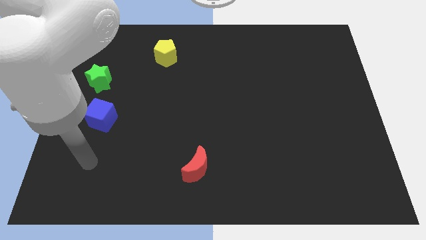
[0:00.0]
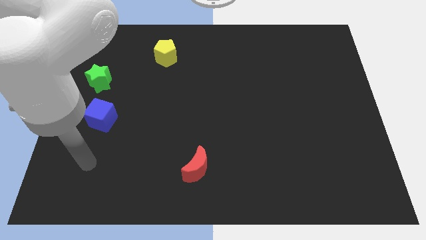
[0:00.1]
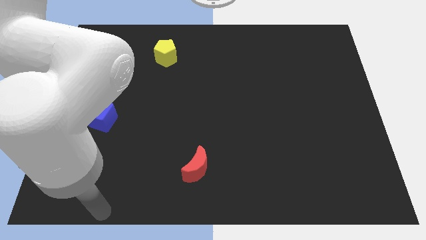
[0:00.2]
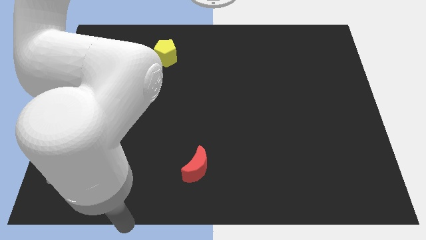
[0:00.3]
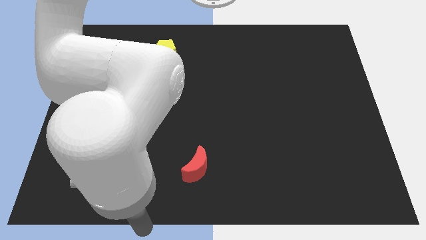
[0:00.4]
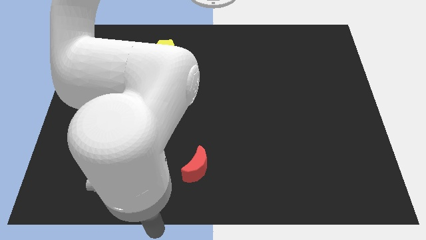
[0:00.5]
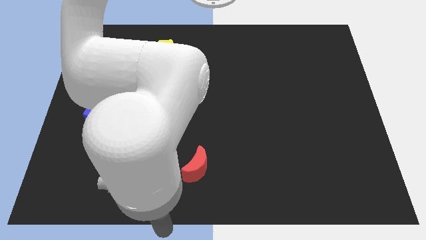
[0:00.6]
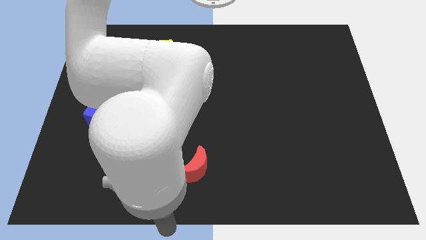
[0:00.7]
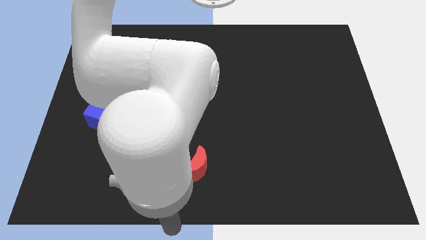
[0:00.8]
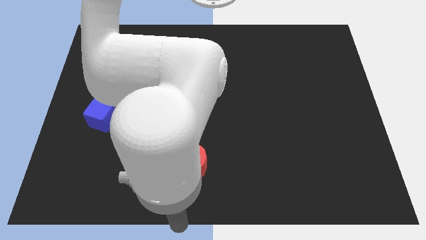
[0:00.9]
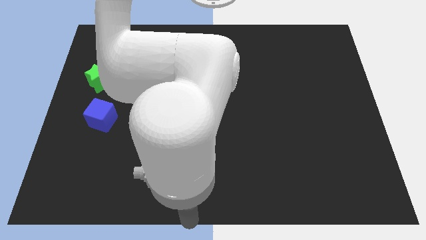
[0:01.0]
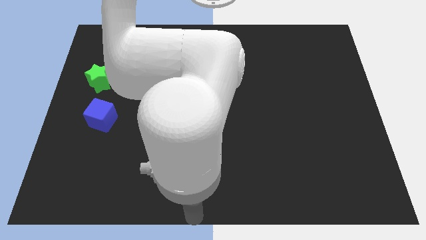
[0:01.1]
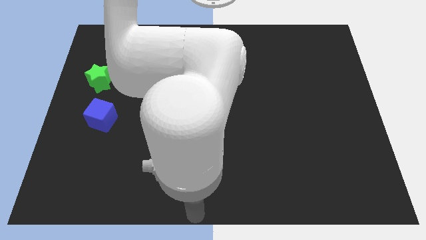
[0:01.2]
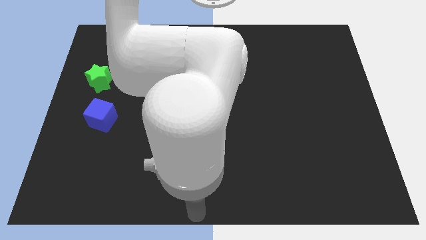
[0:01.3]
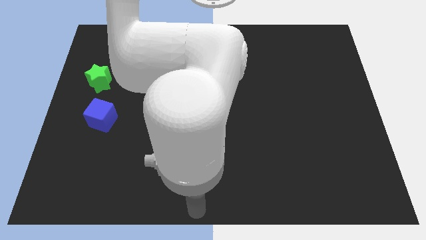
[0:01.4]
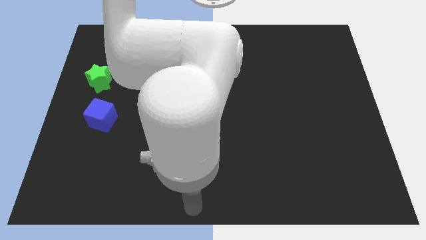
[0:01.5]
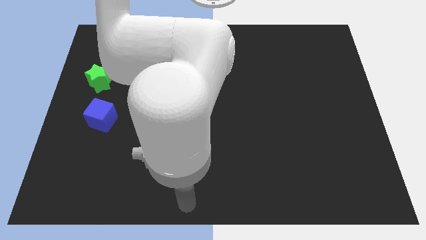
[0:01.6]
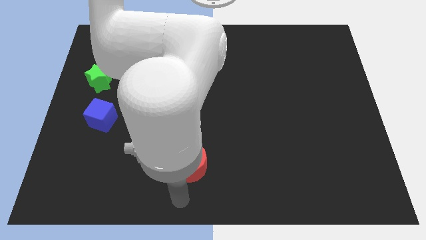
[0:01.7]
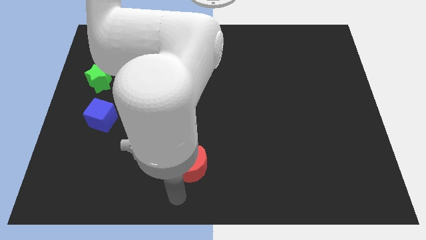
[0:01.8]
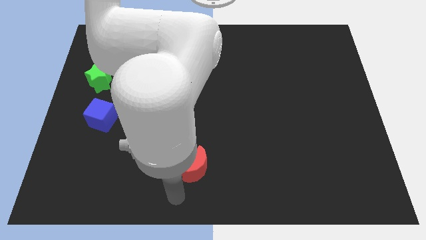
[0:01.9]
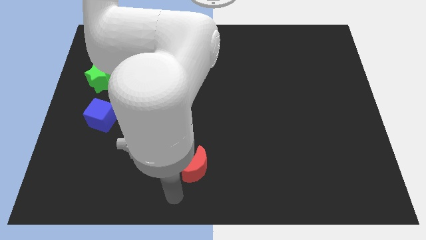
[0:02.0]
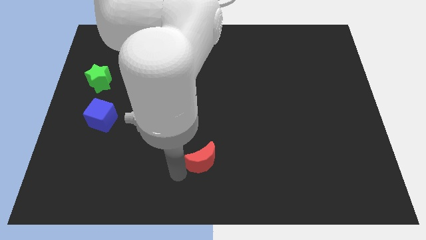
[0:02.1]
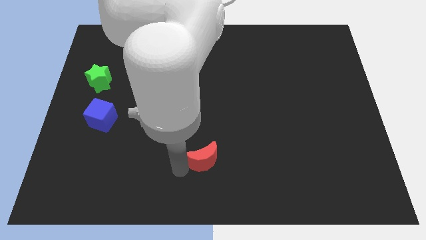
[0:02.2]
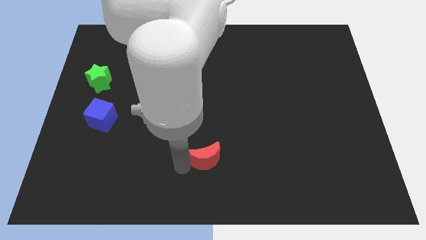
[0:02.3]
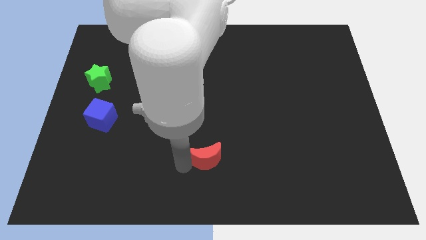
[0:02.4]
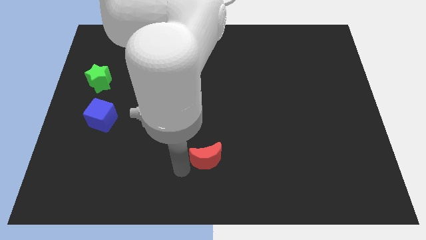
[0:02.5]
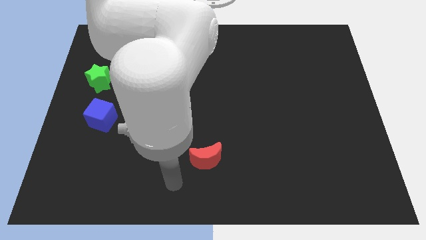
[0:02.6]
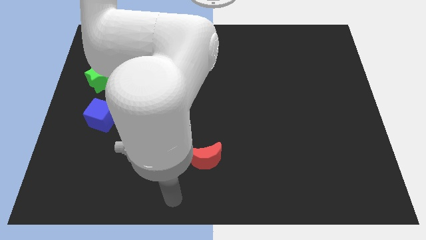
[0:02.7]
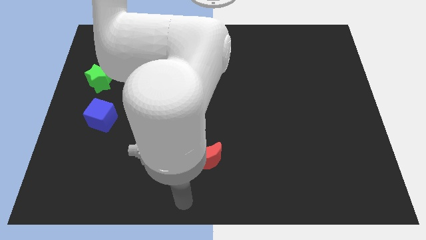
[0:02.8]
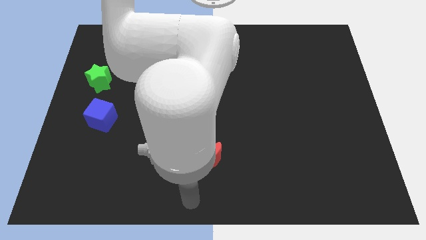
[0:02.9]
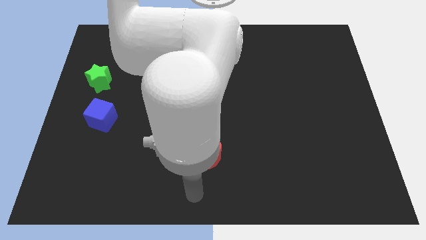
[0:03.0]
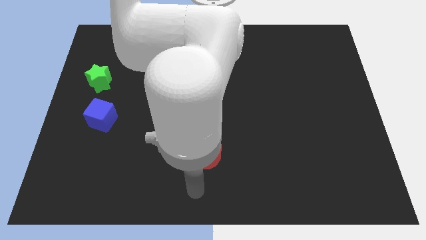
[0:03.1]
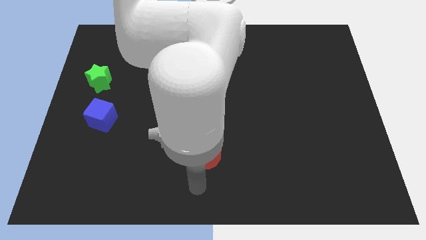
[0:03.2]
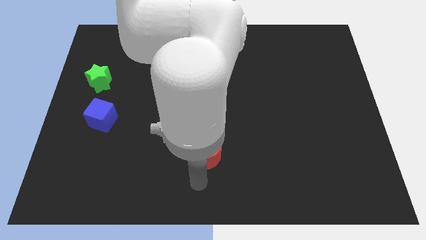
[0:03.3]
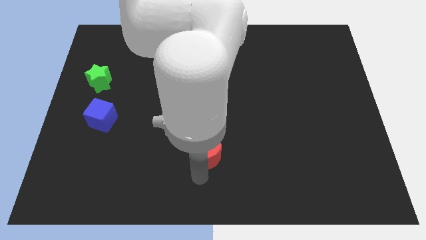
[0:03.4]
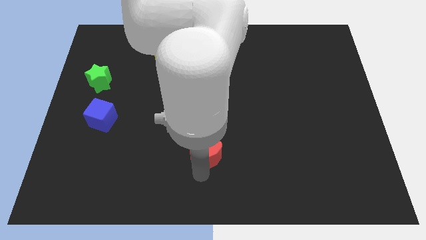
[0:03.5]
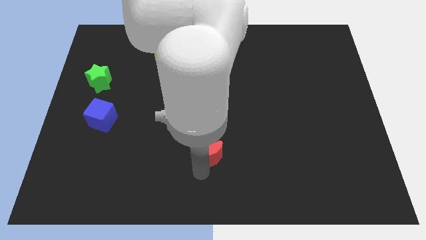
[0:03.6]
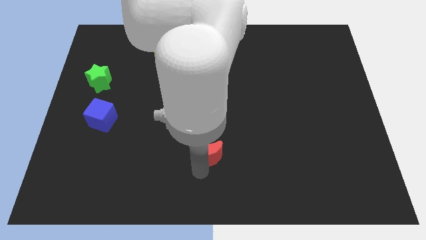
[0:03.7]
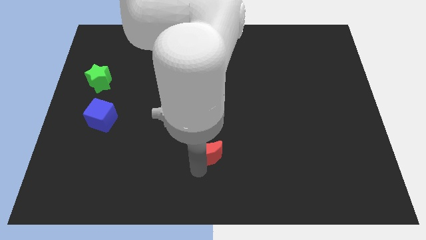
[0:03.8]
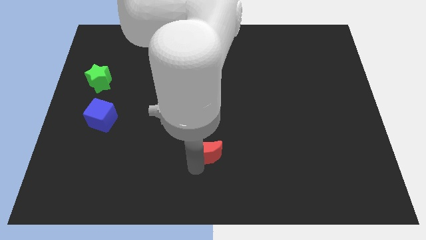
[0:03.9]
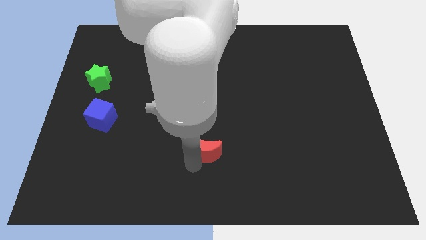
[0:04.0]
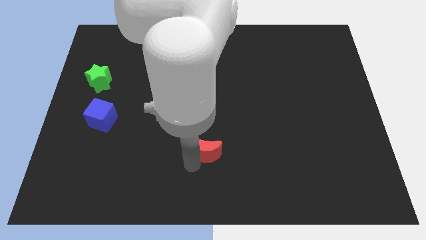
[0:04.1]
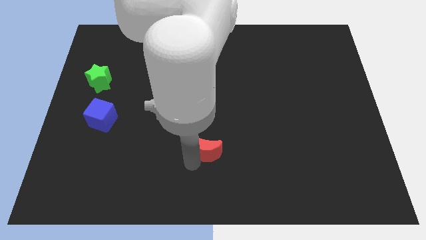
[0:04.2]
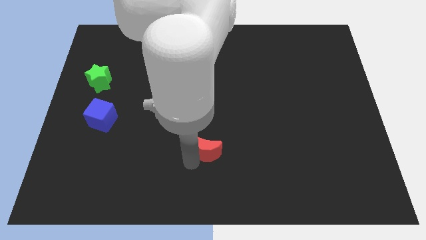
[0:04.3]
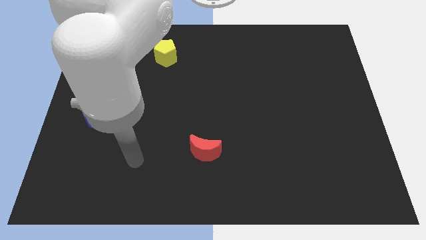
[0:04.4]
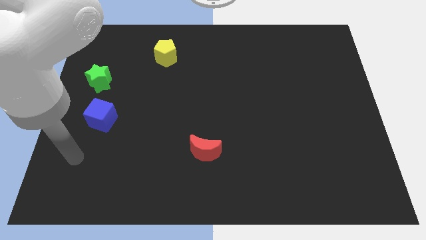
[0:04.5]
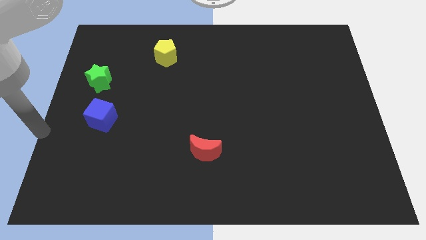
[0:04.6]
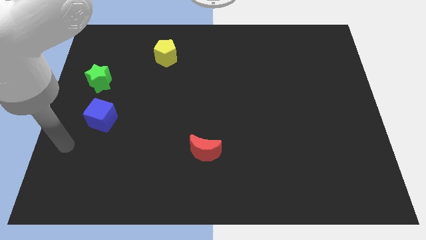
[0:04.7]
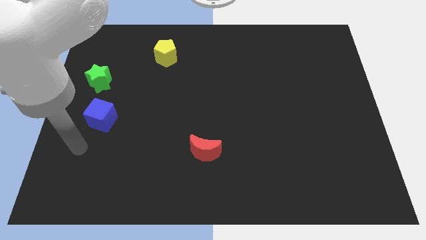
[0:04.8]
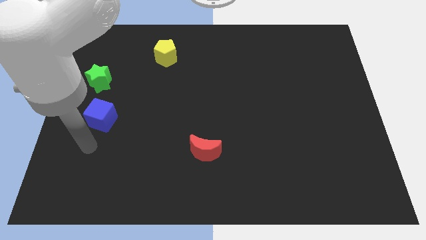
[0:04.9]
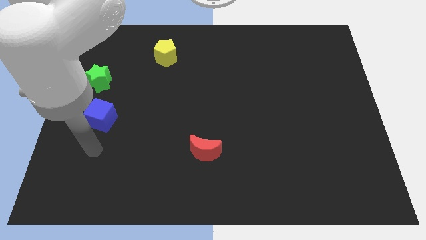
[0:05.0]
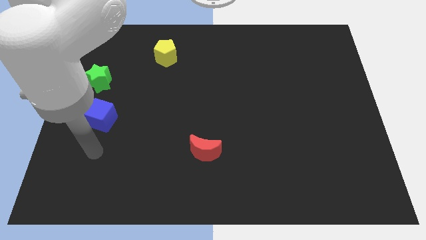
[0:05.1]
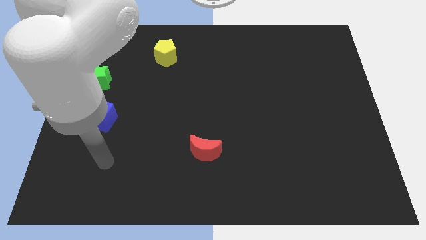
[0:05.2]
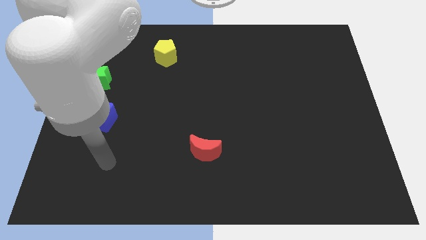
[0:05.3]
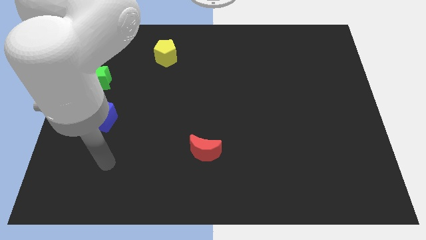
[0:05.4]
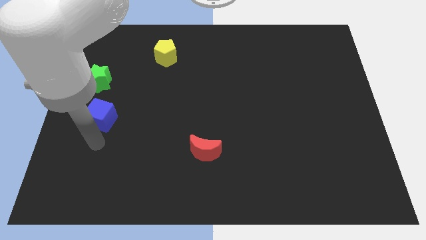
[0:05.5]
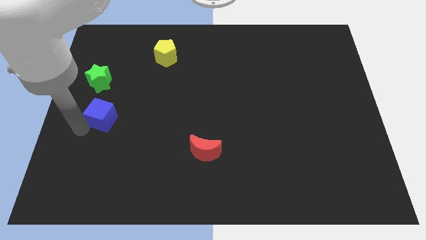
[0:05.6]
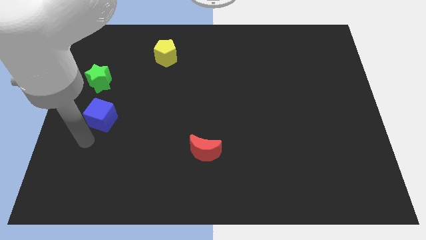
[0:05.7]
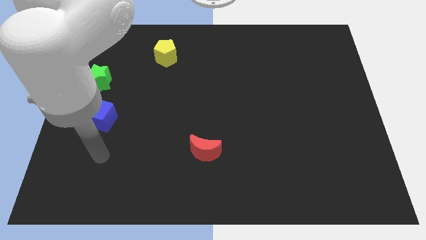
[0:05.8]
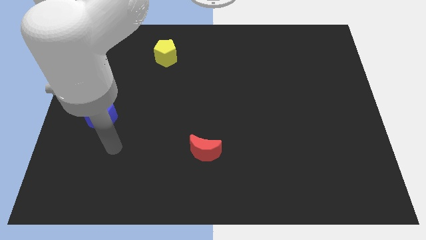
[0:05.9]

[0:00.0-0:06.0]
slide the red moon towards the yellow pentagon

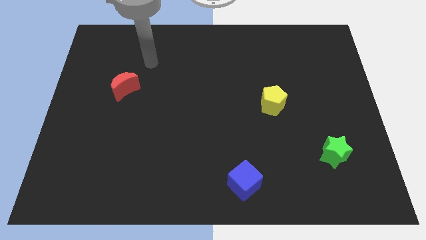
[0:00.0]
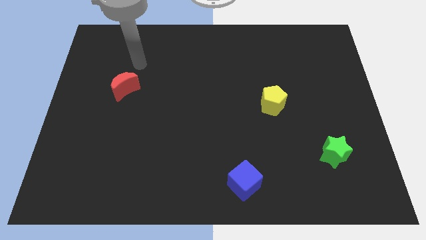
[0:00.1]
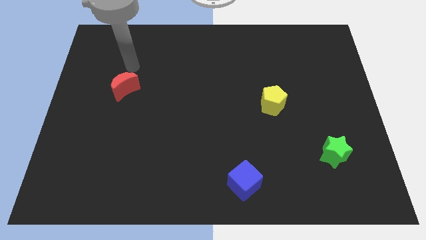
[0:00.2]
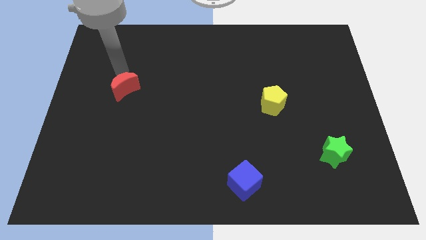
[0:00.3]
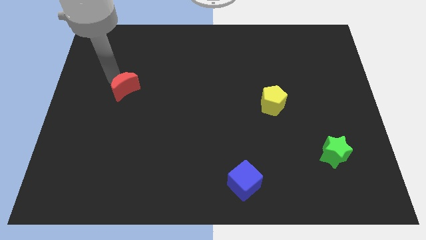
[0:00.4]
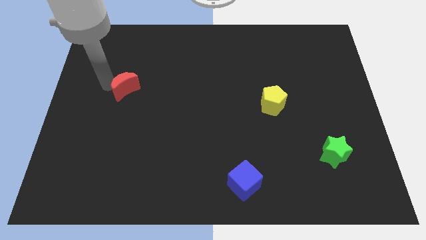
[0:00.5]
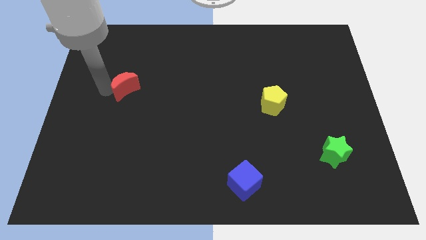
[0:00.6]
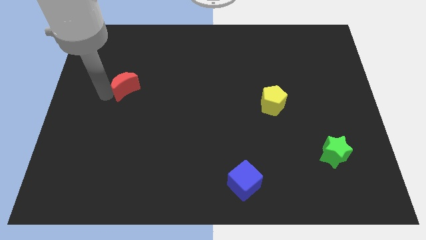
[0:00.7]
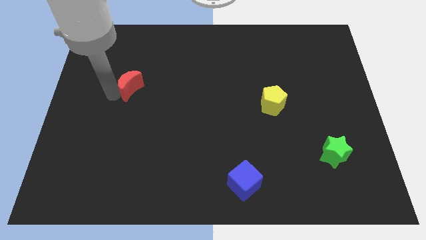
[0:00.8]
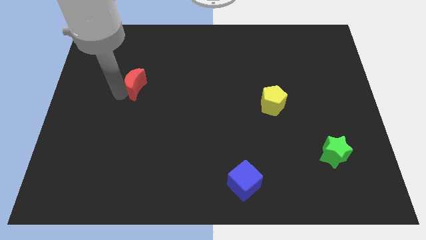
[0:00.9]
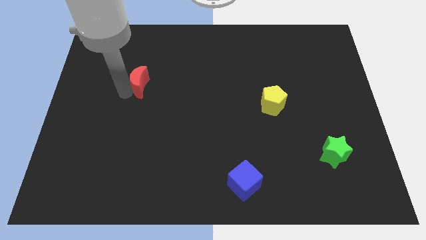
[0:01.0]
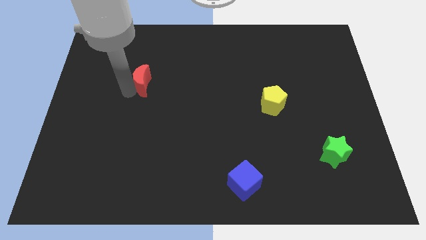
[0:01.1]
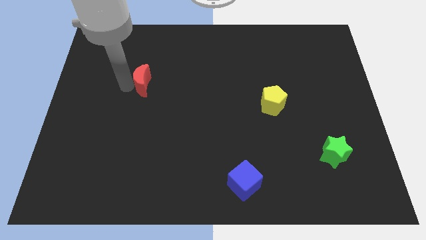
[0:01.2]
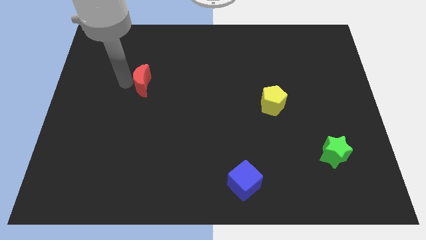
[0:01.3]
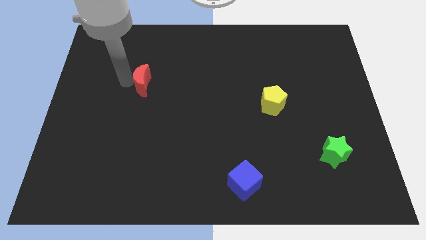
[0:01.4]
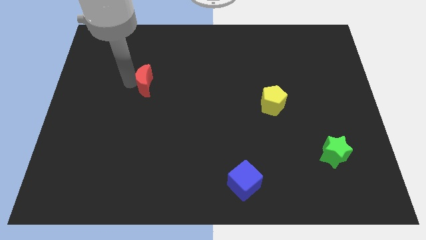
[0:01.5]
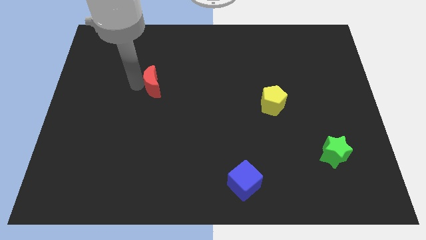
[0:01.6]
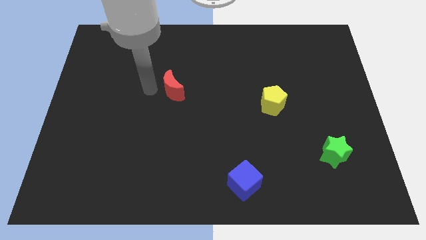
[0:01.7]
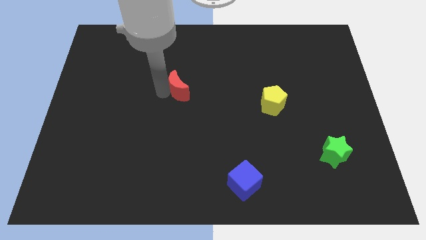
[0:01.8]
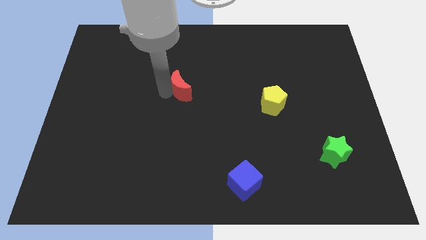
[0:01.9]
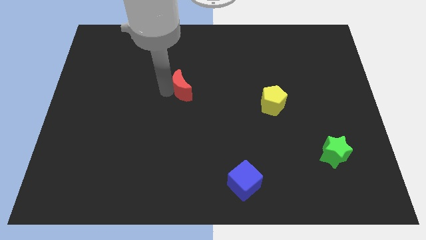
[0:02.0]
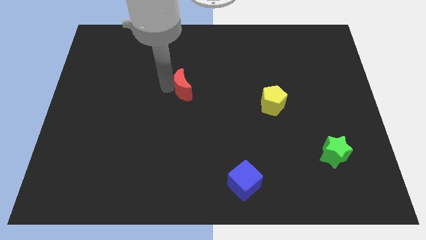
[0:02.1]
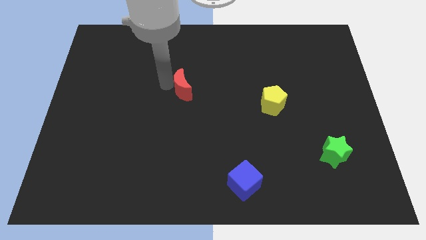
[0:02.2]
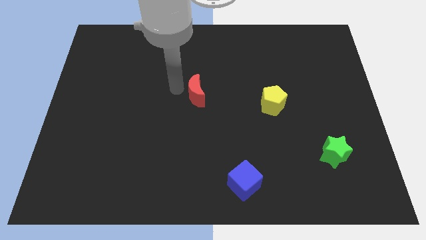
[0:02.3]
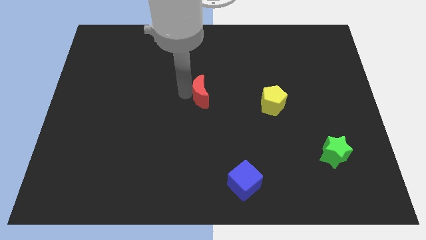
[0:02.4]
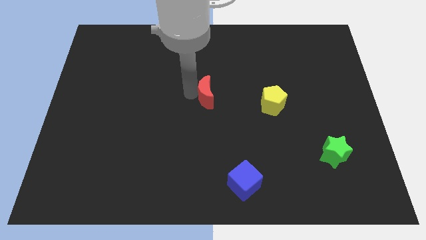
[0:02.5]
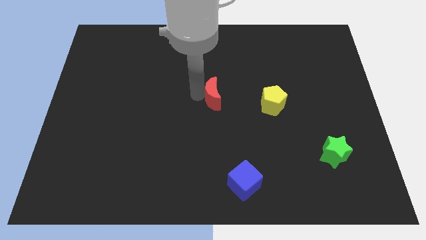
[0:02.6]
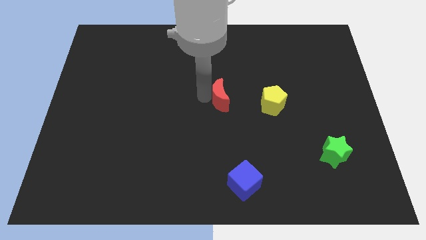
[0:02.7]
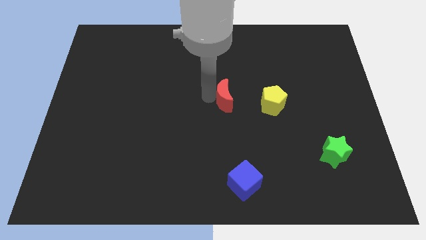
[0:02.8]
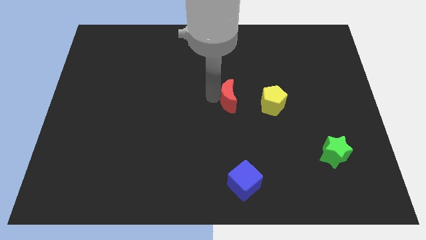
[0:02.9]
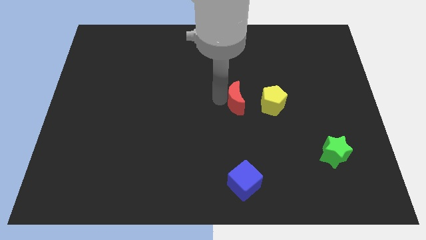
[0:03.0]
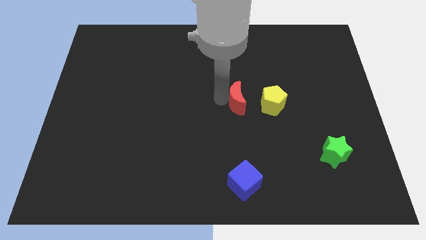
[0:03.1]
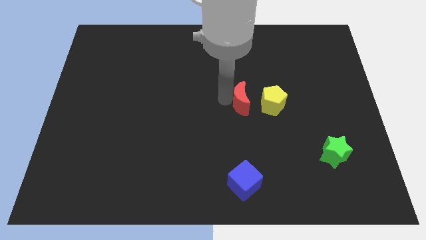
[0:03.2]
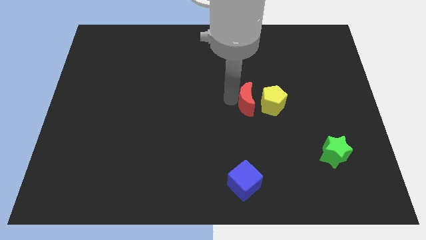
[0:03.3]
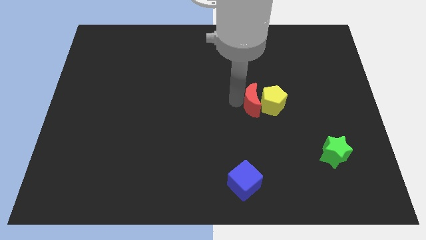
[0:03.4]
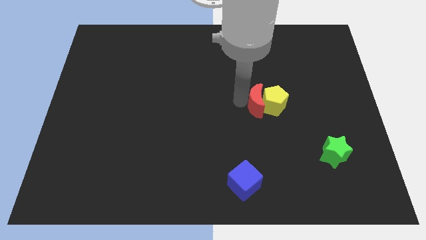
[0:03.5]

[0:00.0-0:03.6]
slide the red block to the yellow pentagon
